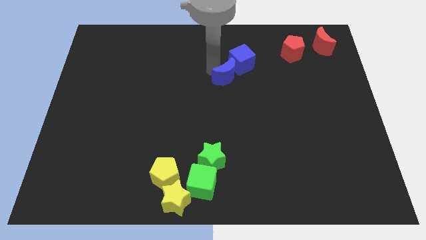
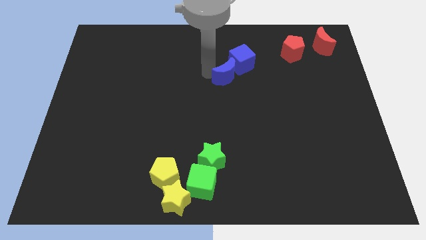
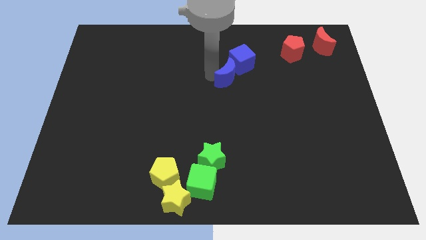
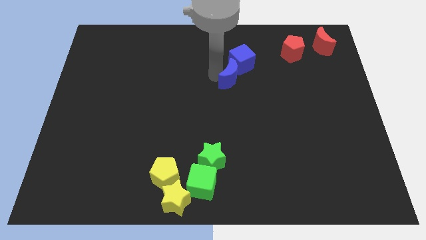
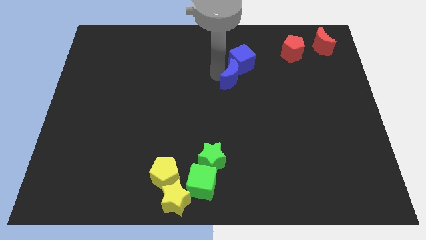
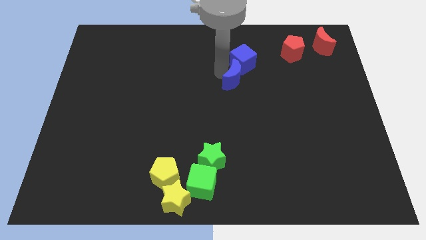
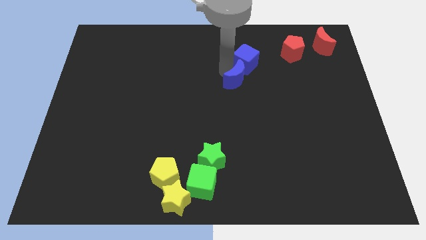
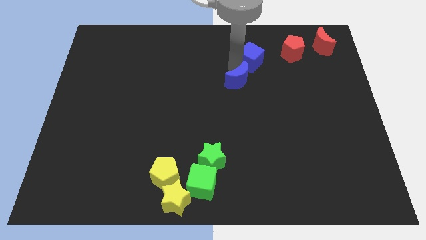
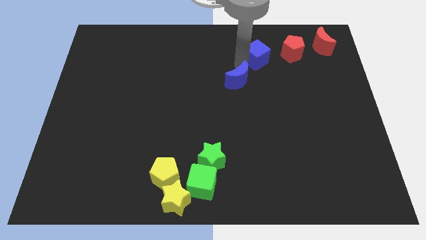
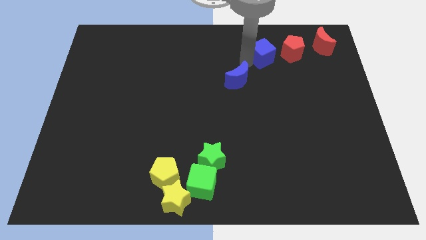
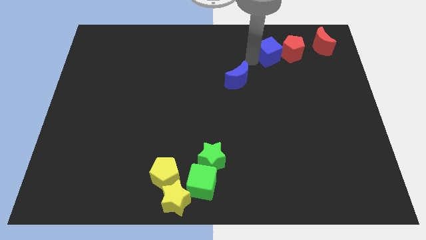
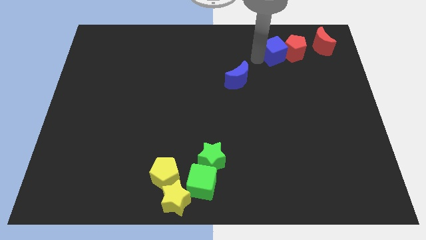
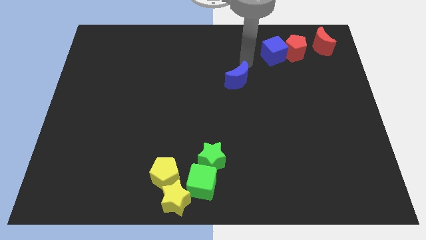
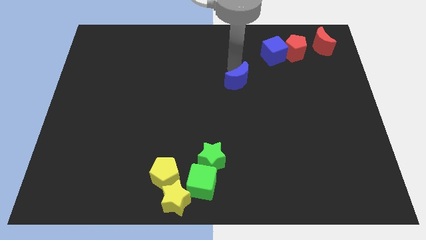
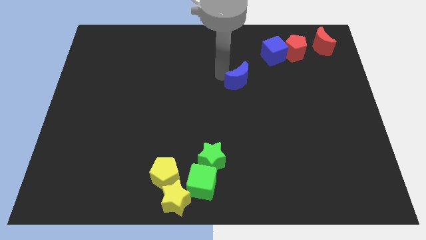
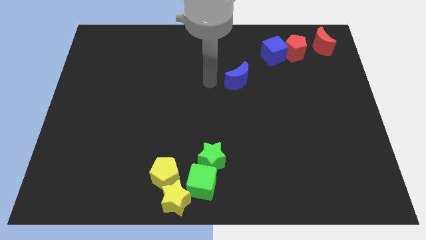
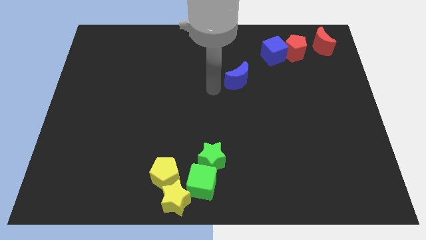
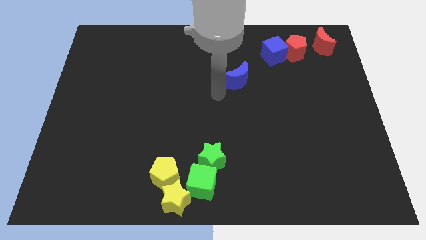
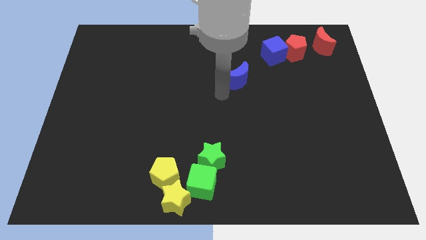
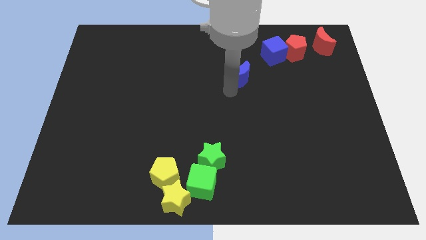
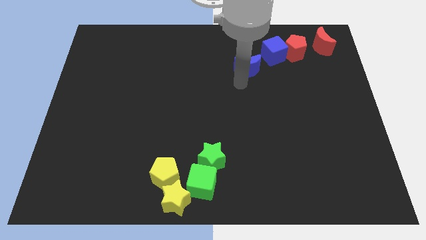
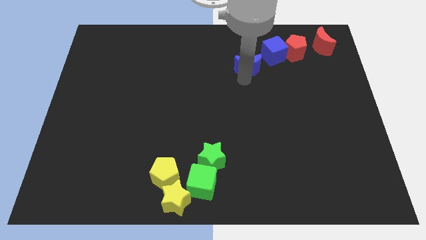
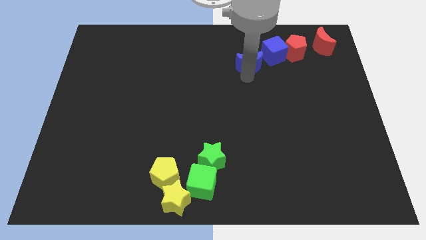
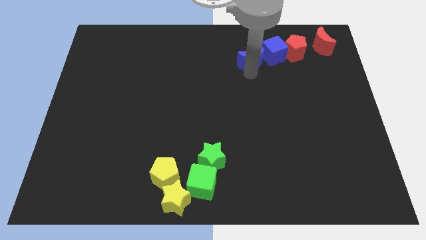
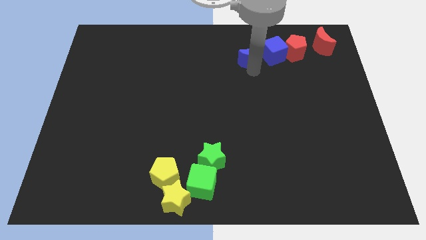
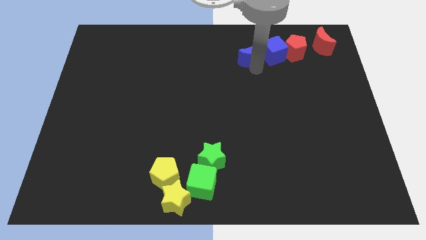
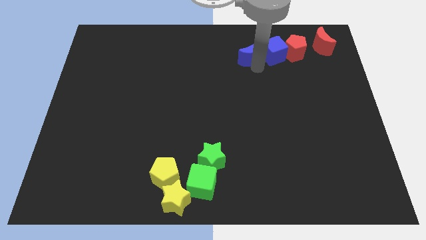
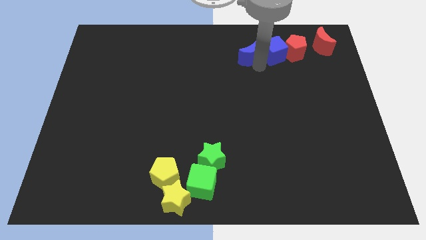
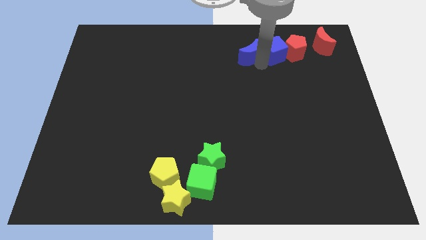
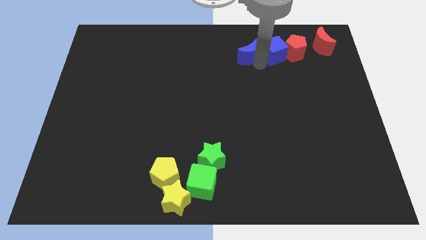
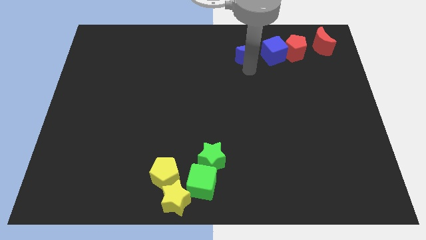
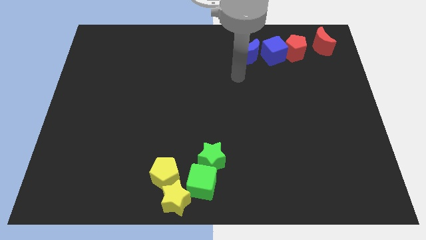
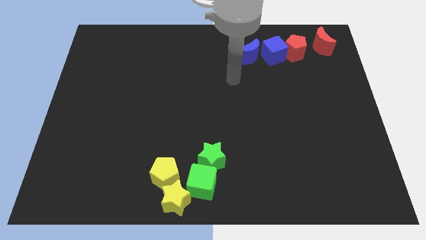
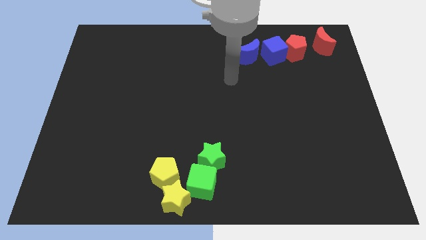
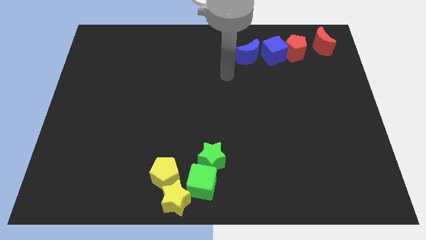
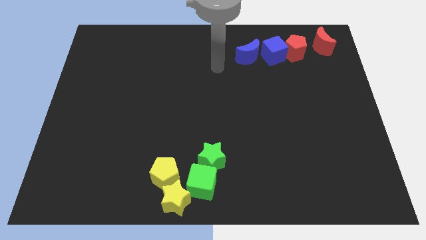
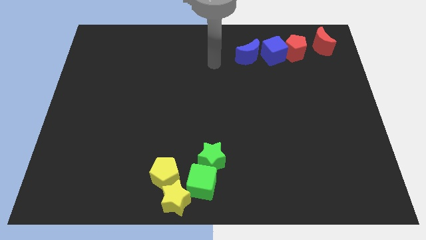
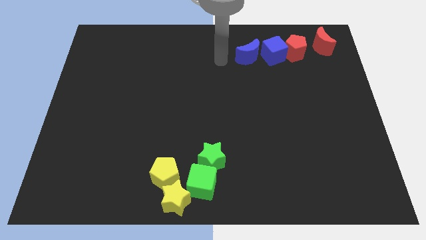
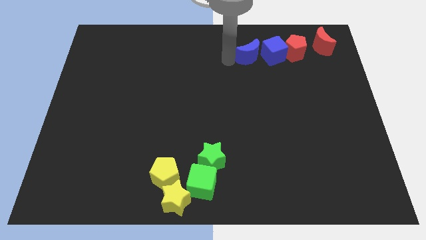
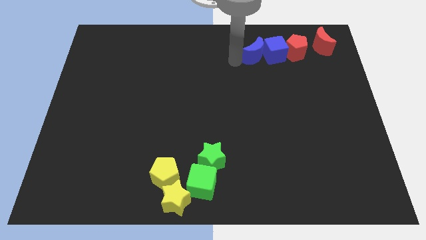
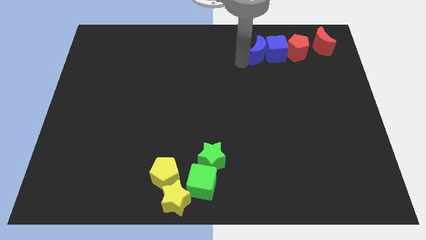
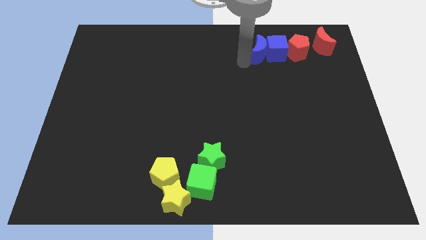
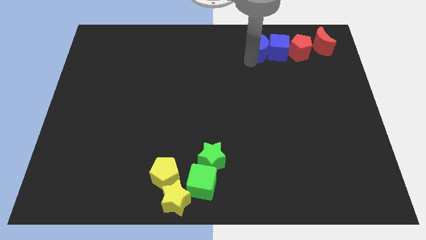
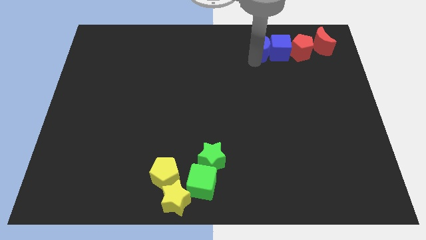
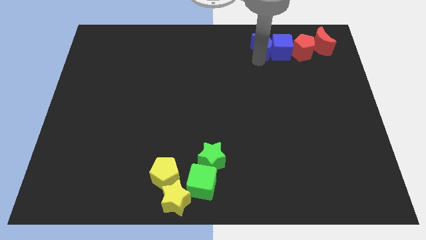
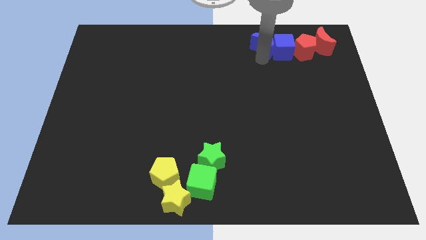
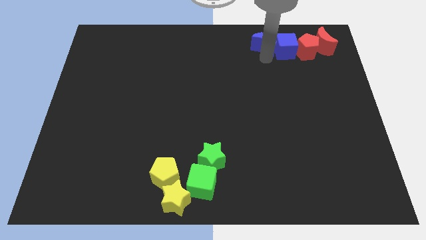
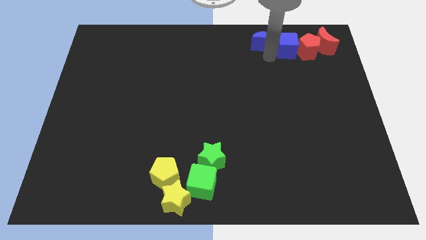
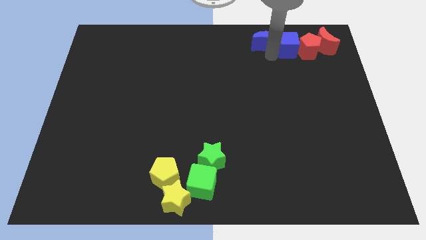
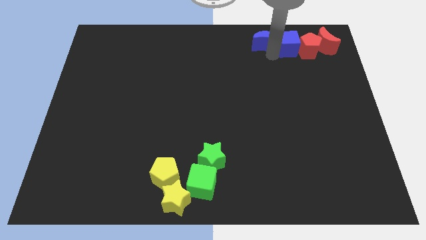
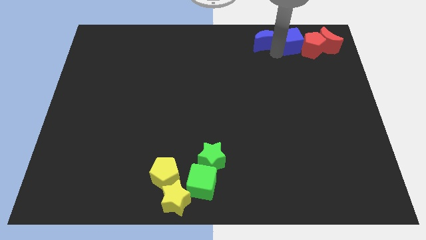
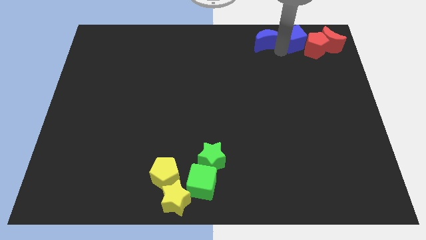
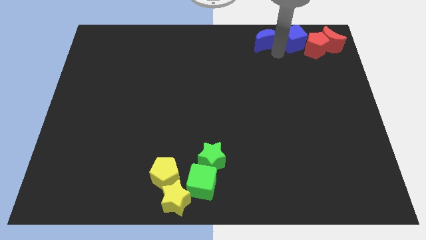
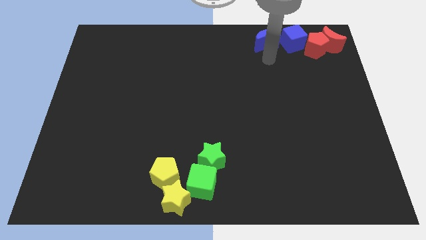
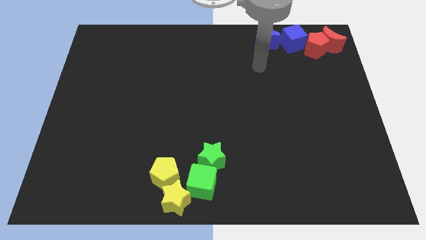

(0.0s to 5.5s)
move blue blocks into the red blocks

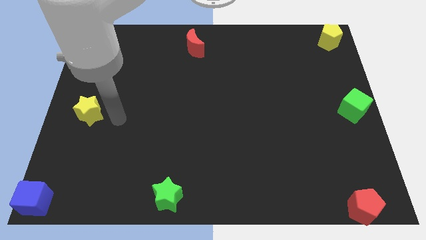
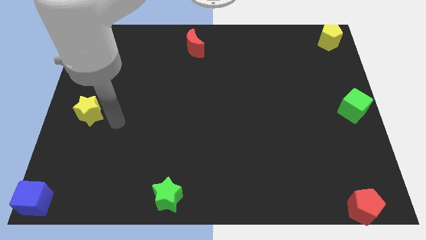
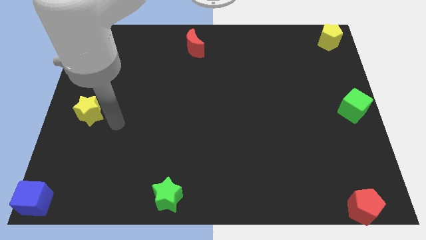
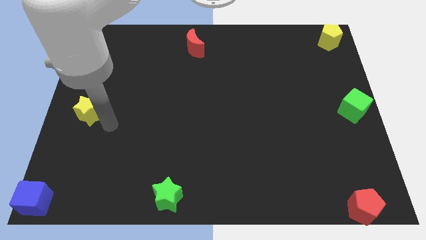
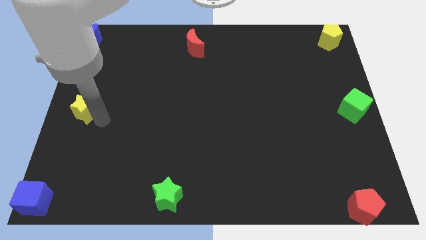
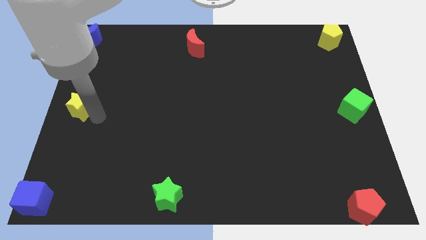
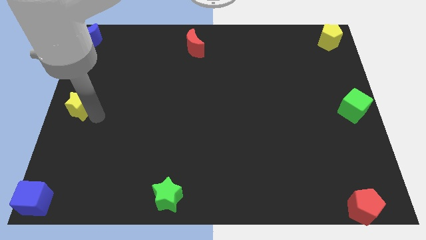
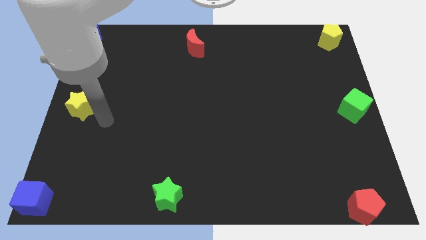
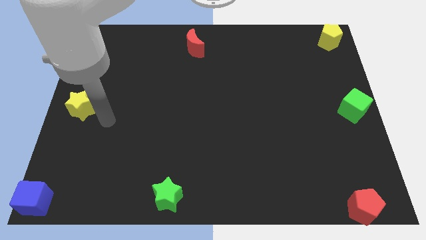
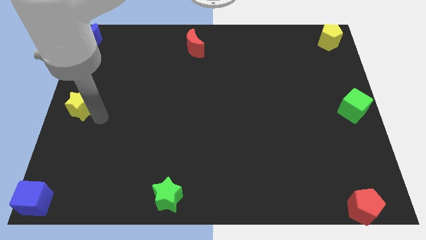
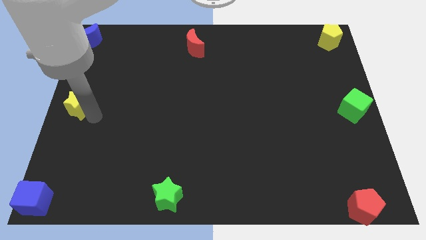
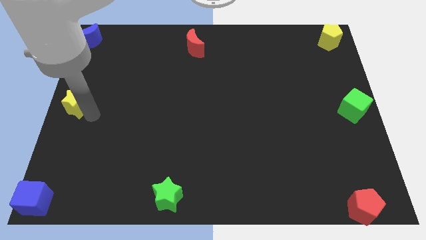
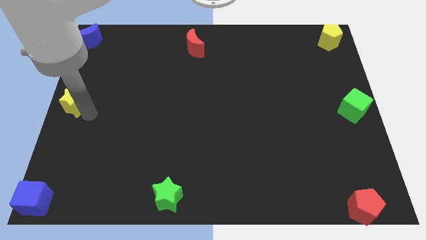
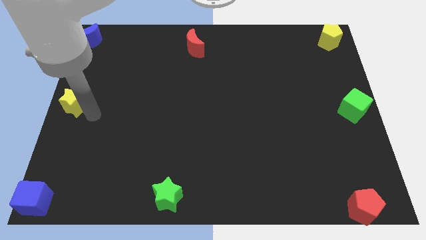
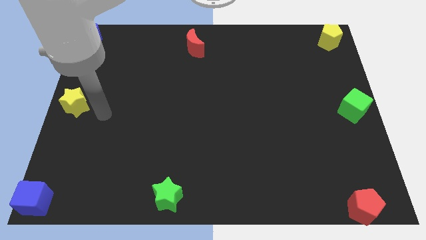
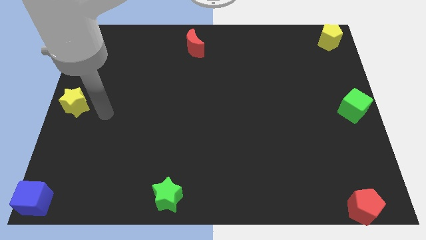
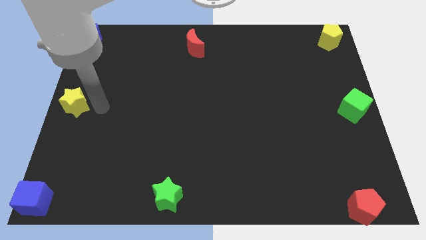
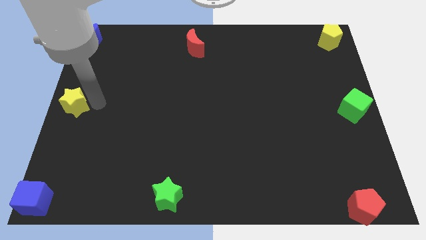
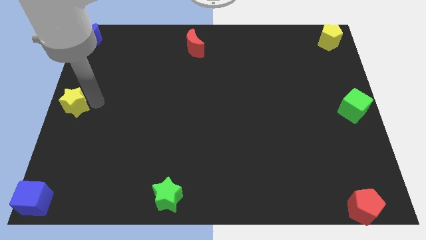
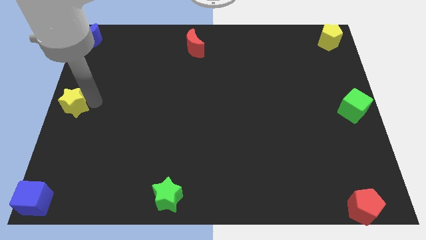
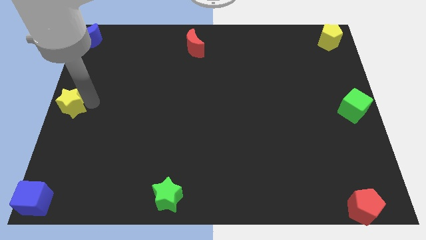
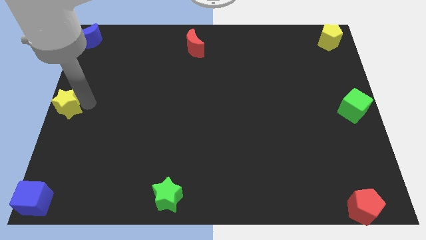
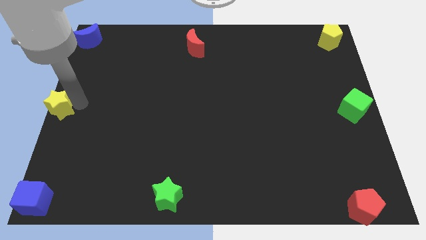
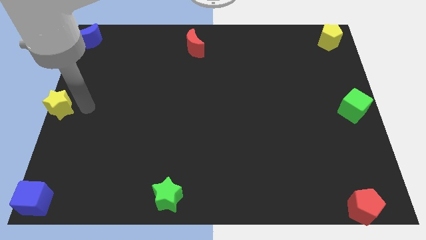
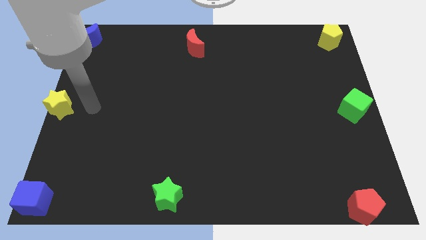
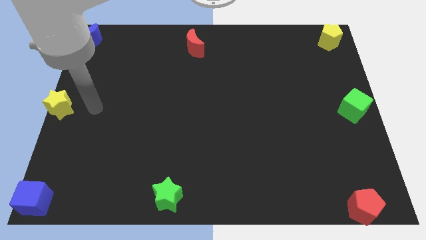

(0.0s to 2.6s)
place the yellow star at the center left of the board

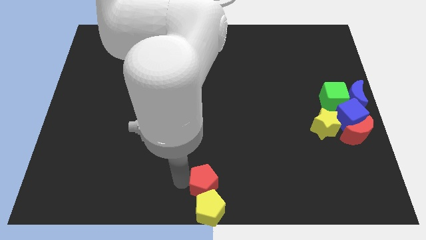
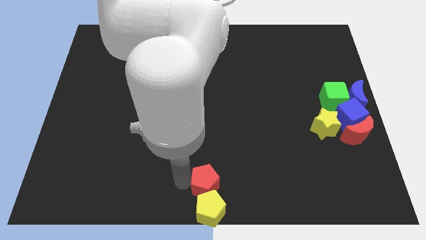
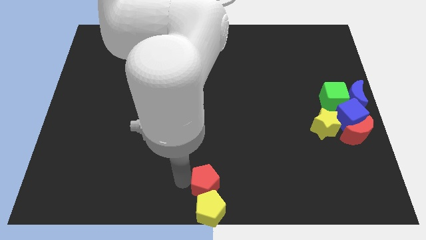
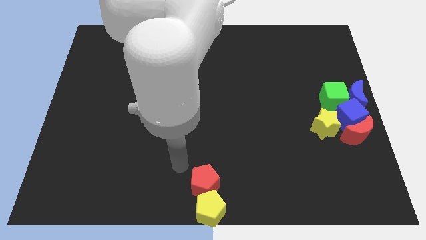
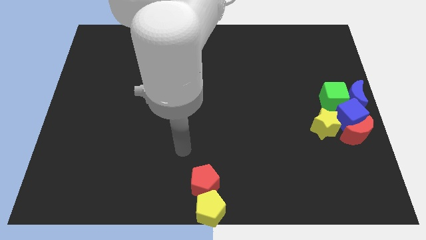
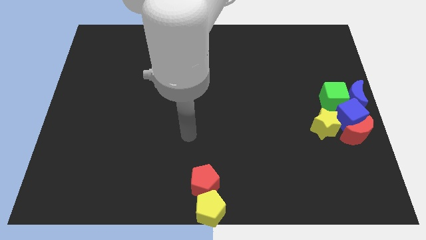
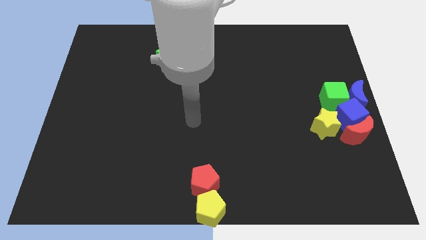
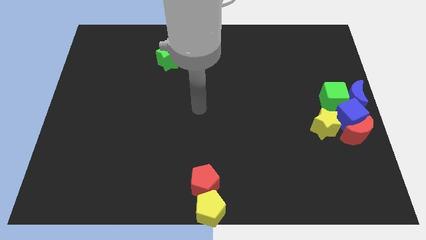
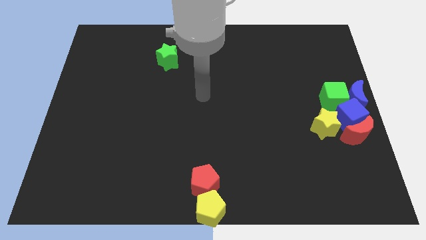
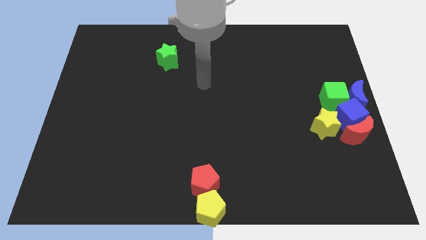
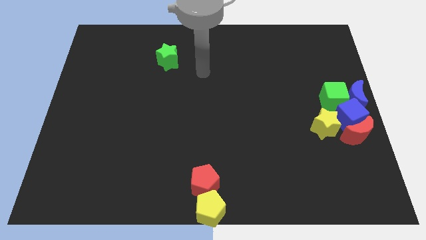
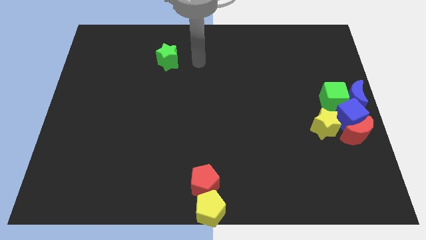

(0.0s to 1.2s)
point your arm to the right side of green star
